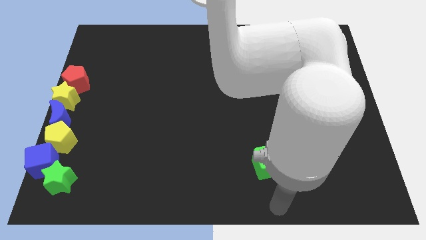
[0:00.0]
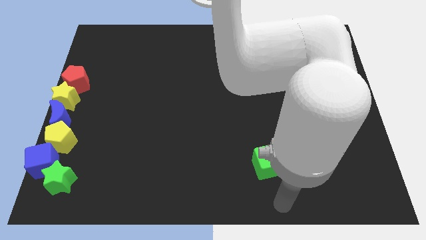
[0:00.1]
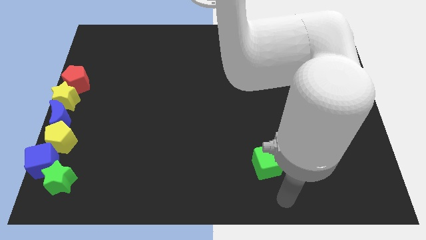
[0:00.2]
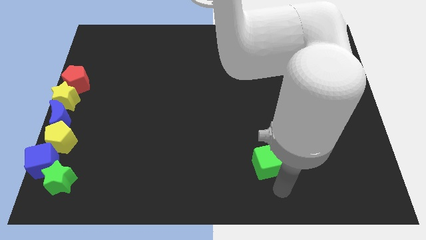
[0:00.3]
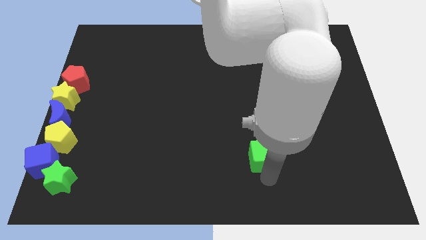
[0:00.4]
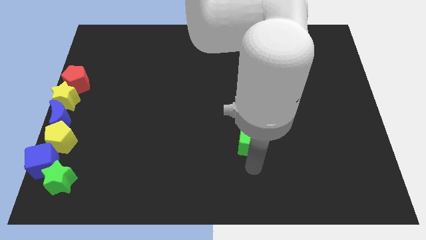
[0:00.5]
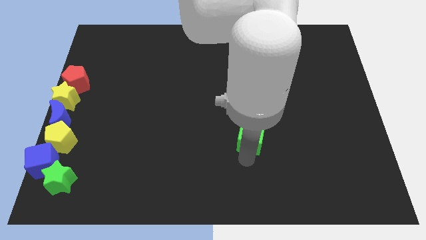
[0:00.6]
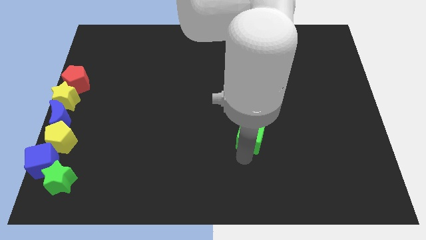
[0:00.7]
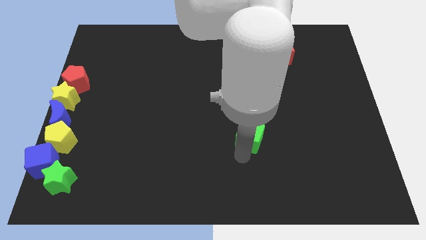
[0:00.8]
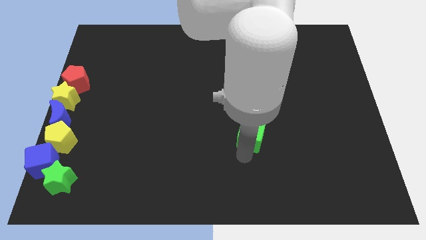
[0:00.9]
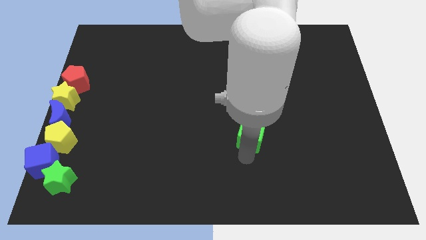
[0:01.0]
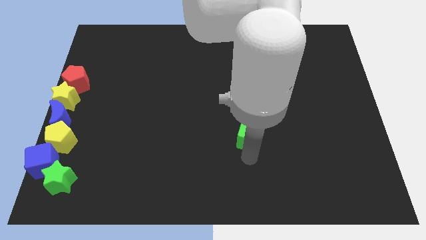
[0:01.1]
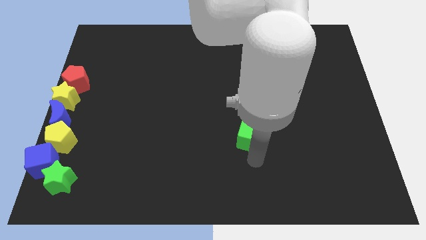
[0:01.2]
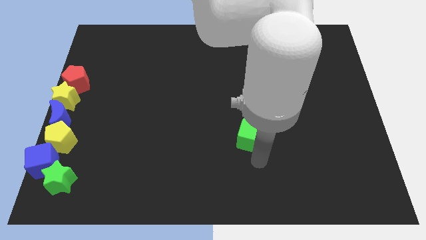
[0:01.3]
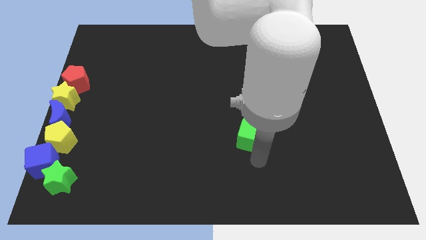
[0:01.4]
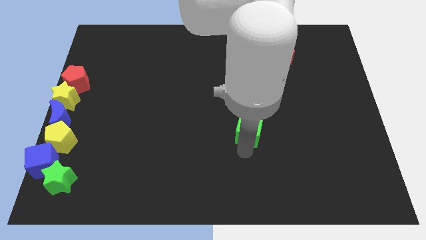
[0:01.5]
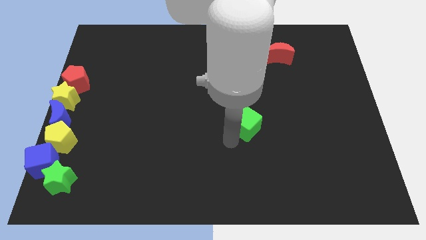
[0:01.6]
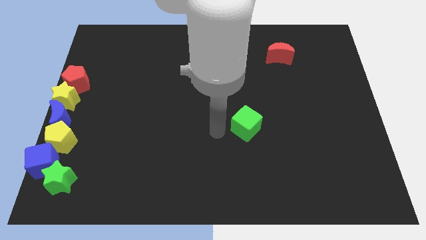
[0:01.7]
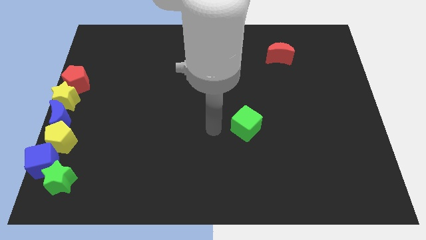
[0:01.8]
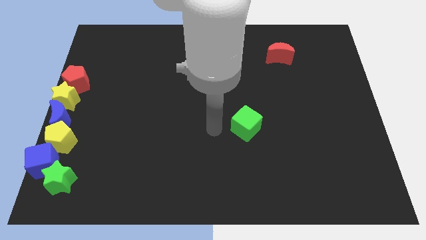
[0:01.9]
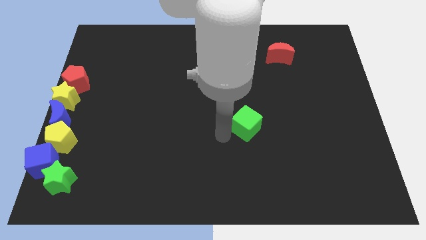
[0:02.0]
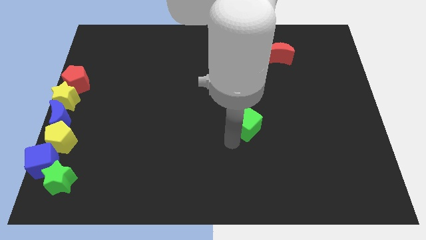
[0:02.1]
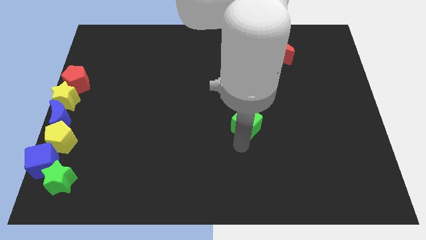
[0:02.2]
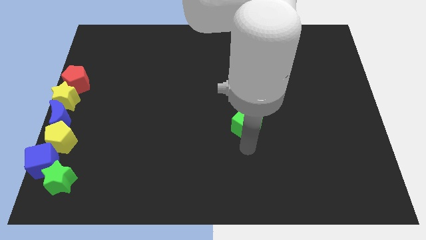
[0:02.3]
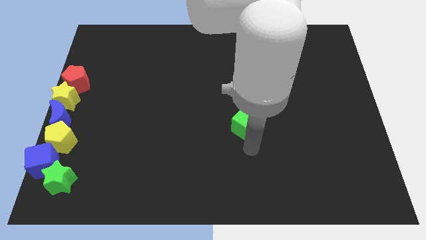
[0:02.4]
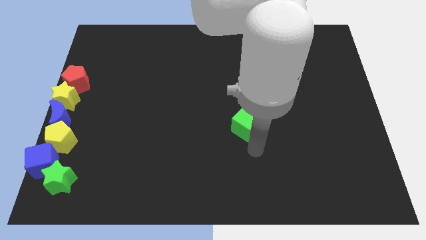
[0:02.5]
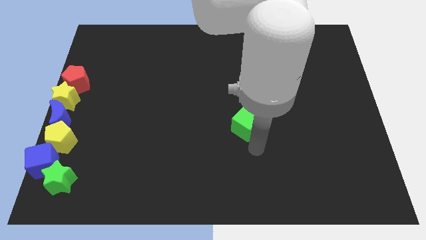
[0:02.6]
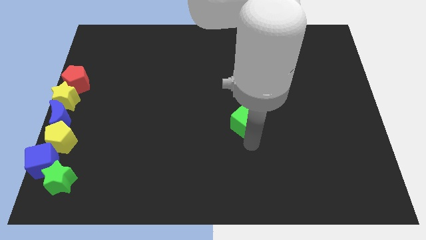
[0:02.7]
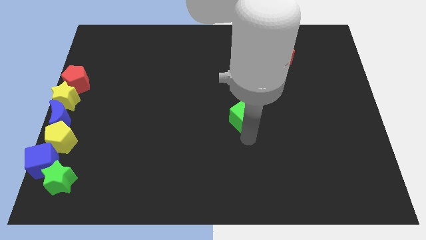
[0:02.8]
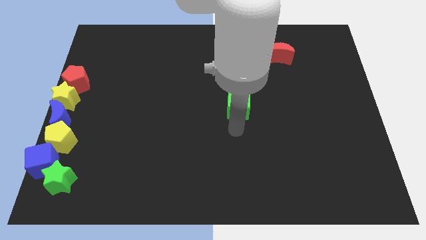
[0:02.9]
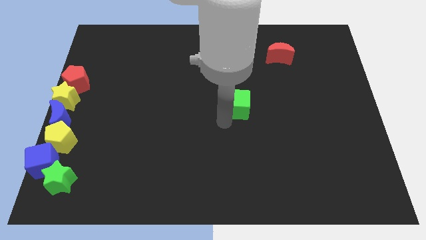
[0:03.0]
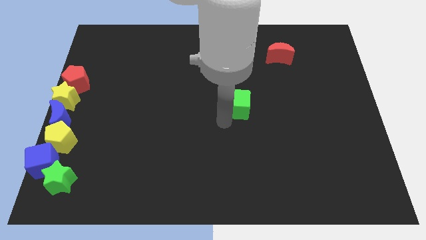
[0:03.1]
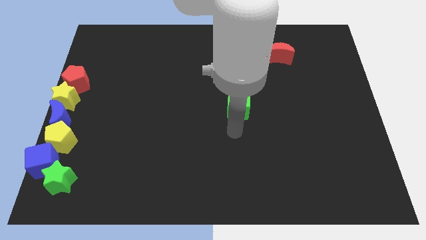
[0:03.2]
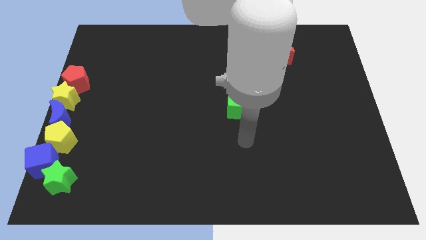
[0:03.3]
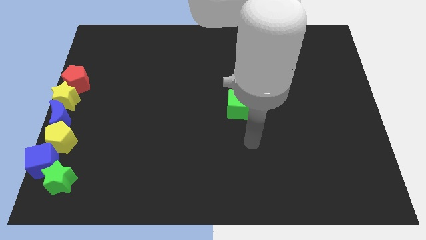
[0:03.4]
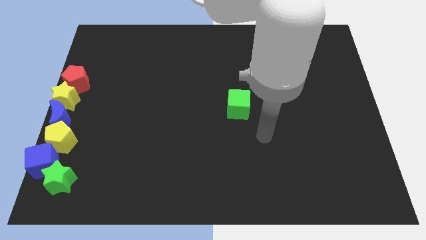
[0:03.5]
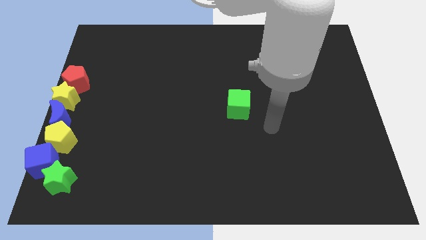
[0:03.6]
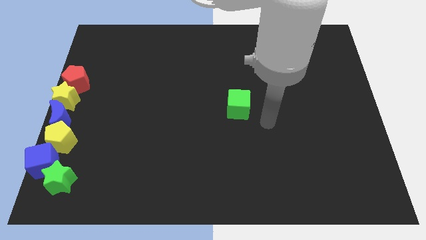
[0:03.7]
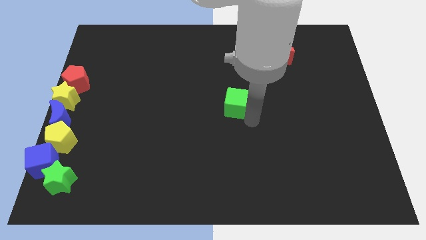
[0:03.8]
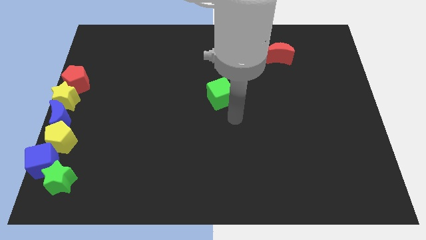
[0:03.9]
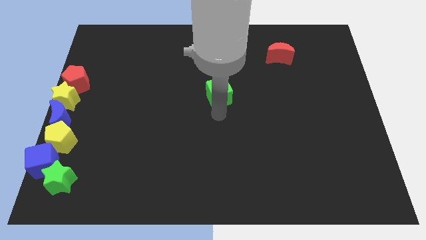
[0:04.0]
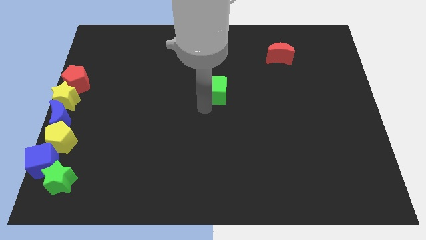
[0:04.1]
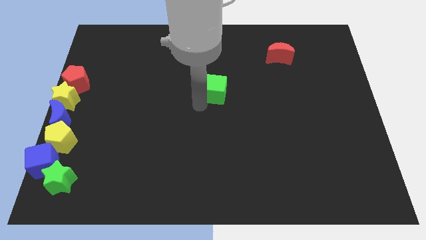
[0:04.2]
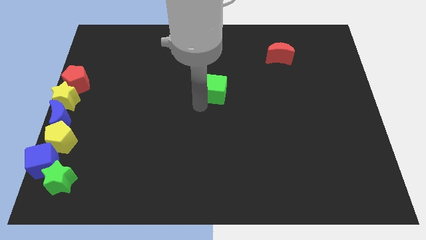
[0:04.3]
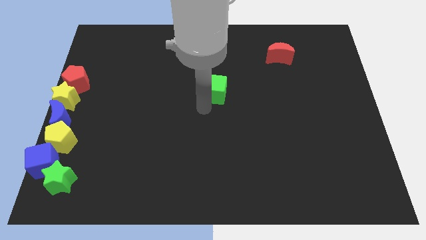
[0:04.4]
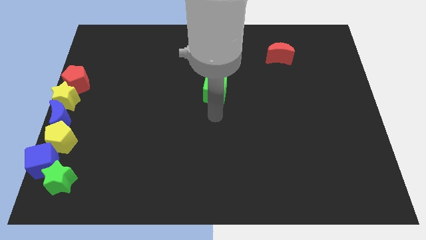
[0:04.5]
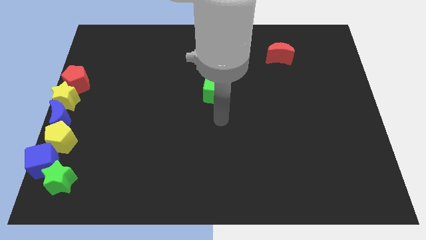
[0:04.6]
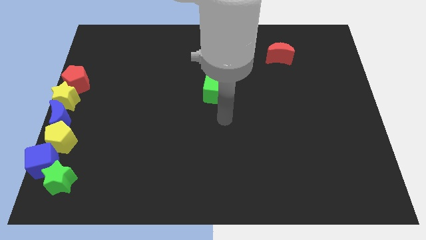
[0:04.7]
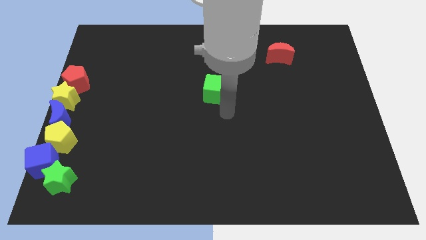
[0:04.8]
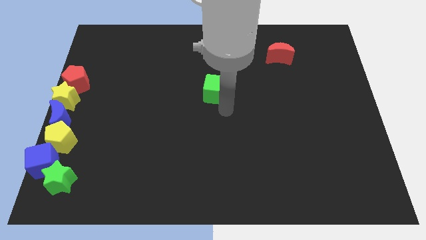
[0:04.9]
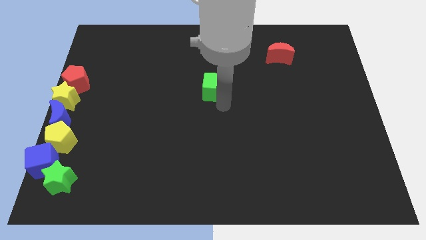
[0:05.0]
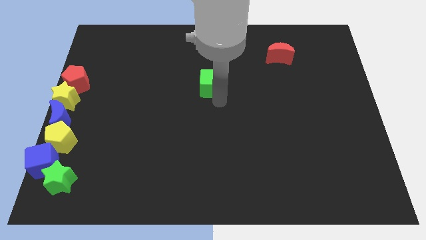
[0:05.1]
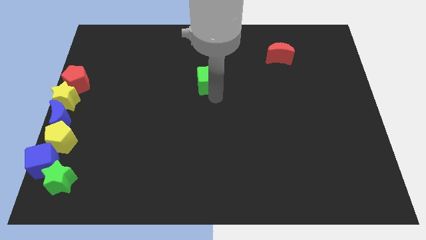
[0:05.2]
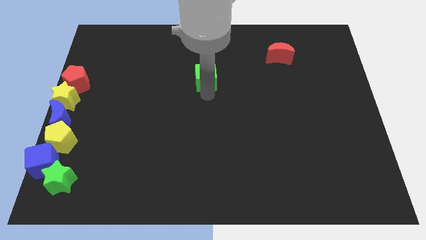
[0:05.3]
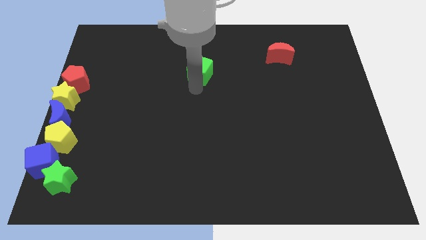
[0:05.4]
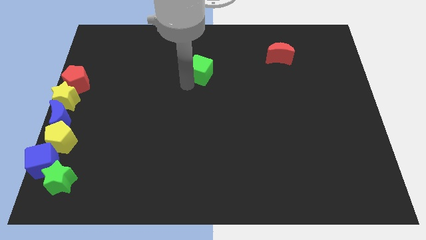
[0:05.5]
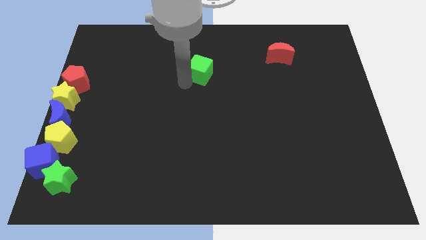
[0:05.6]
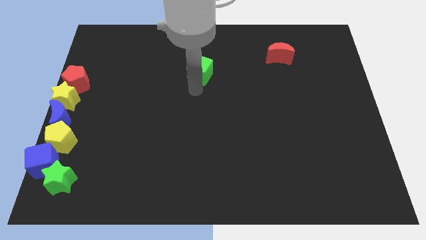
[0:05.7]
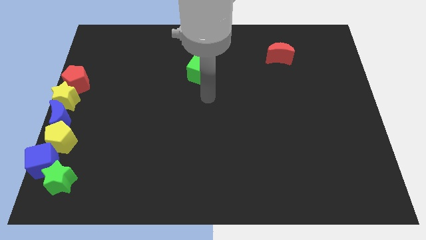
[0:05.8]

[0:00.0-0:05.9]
move the green cube diagonally on the bottom left side of the red crescent

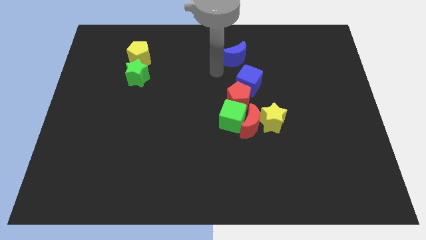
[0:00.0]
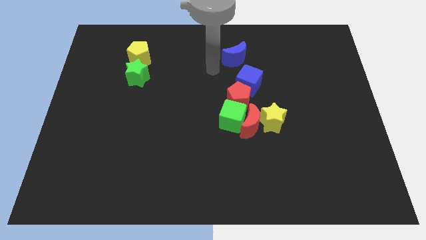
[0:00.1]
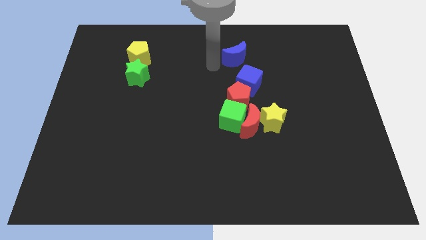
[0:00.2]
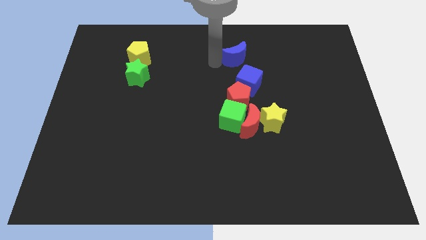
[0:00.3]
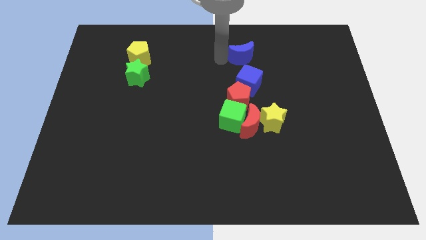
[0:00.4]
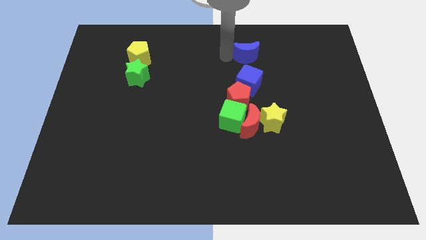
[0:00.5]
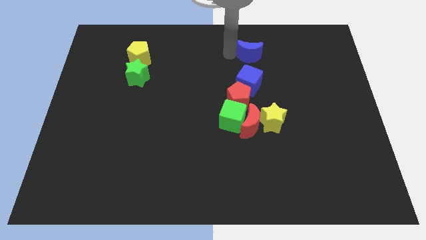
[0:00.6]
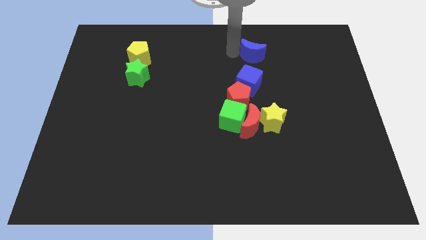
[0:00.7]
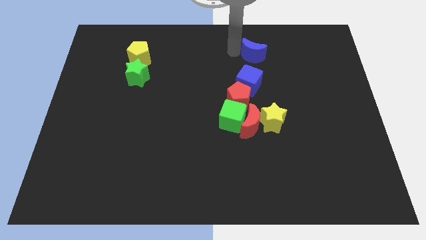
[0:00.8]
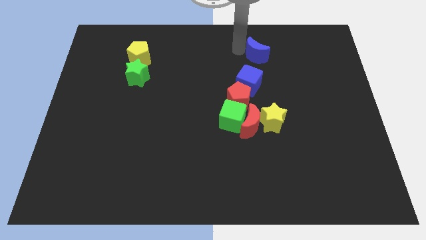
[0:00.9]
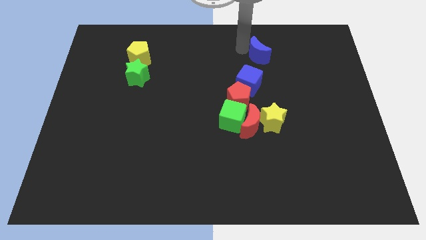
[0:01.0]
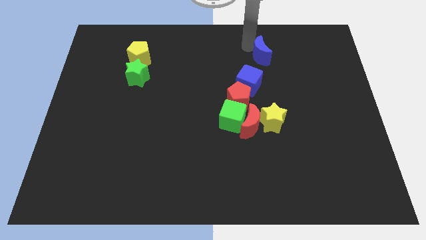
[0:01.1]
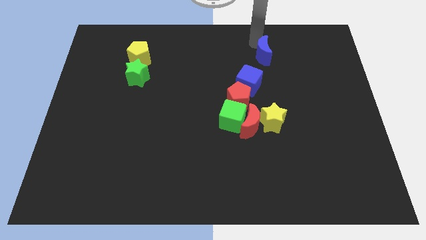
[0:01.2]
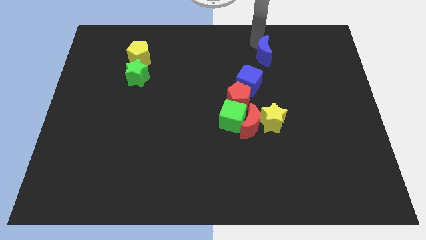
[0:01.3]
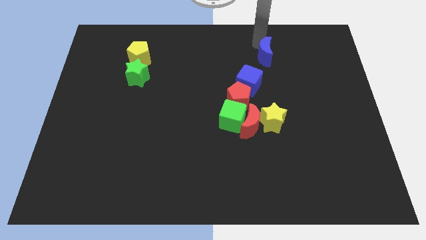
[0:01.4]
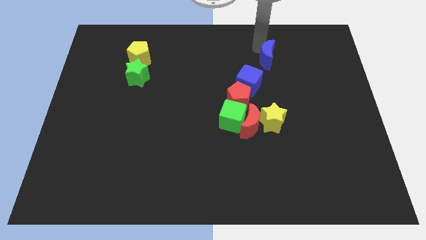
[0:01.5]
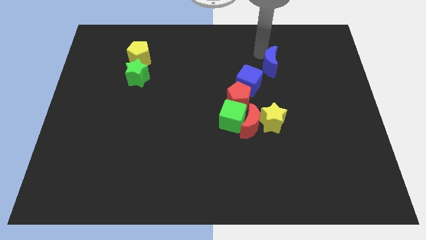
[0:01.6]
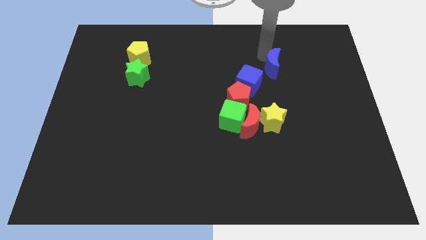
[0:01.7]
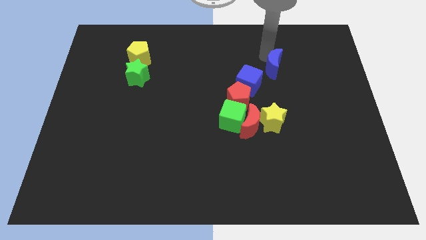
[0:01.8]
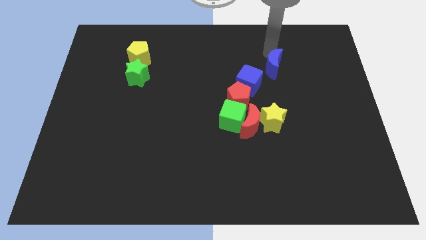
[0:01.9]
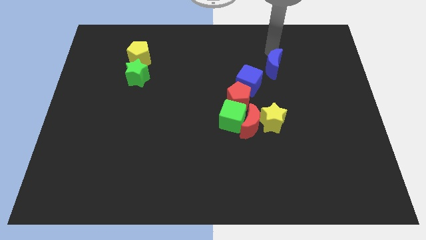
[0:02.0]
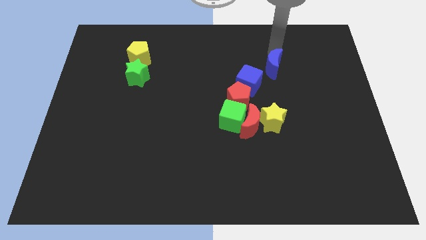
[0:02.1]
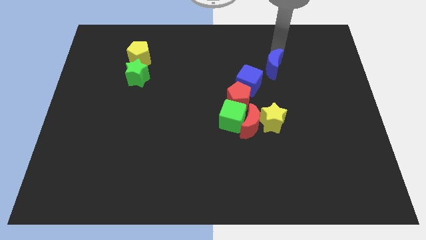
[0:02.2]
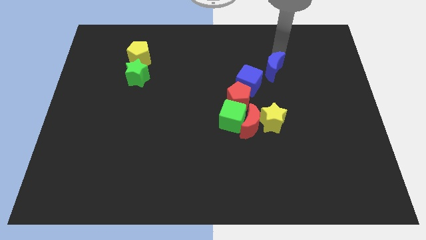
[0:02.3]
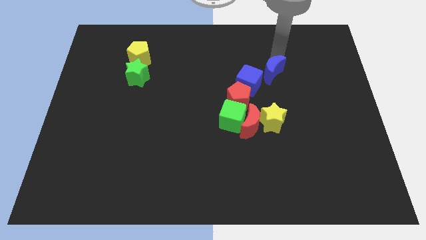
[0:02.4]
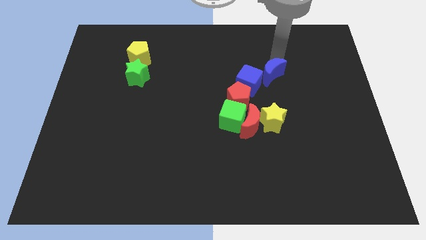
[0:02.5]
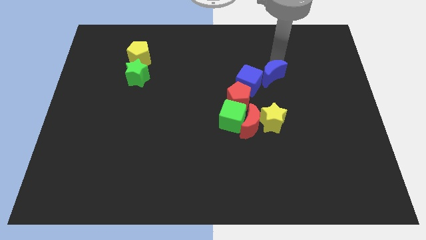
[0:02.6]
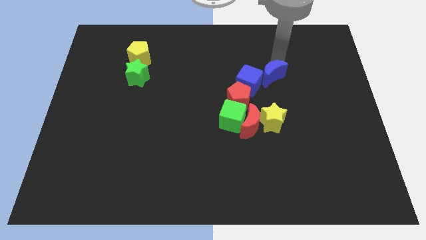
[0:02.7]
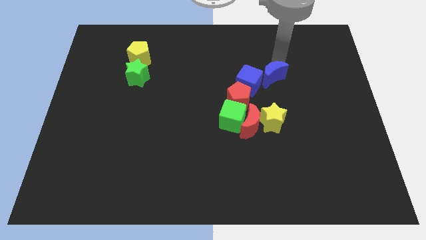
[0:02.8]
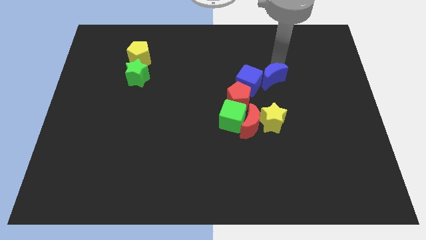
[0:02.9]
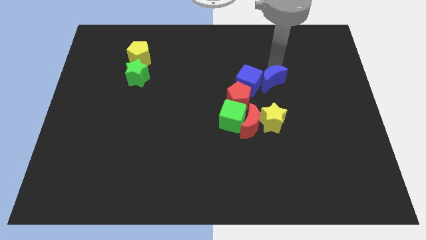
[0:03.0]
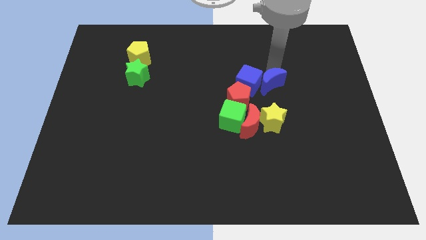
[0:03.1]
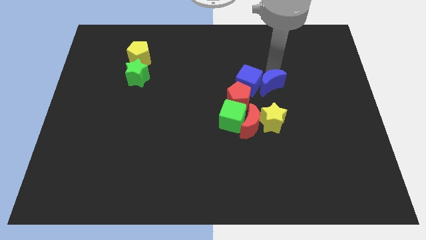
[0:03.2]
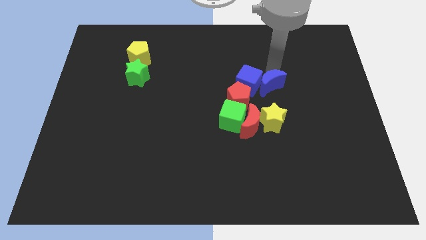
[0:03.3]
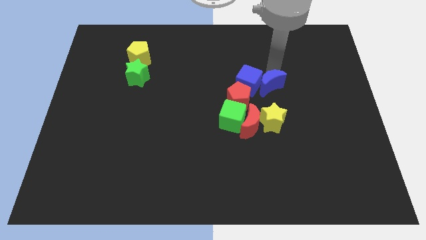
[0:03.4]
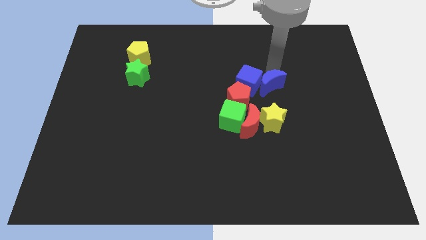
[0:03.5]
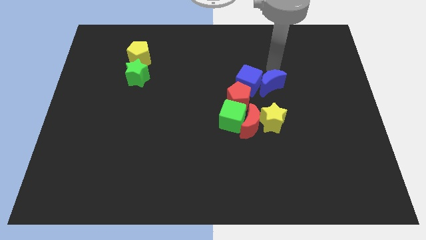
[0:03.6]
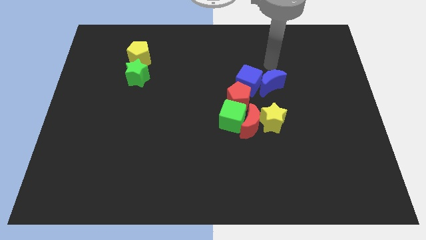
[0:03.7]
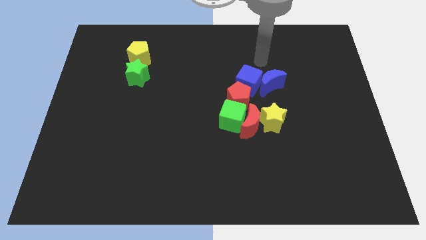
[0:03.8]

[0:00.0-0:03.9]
move the blue crescent to the right of blue cube
